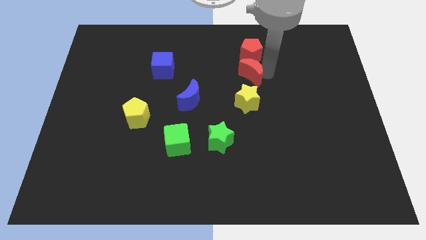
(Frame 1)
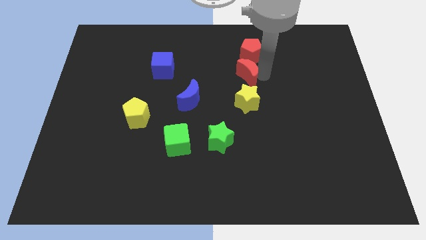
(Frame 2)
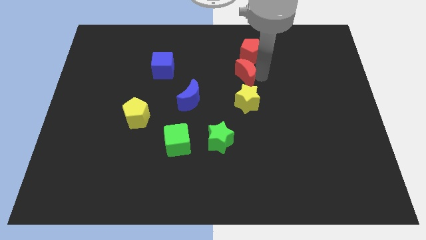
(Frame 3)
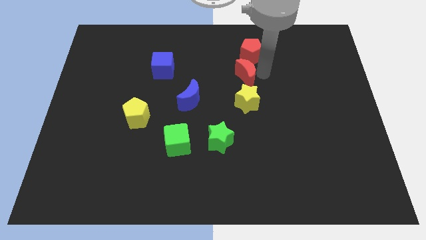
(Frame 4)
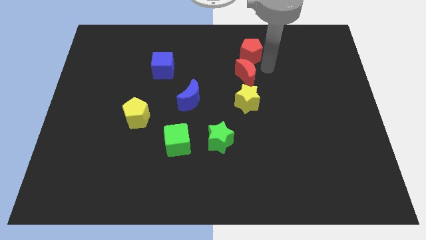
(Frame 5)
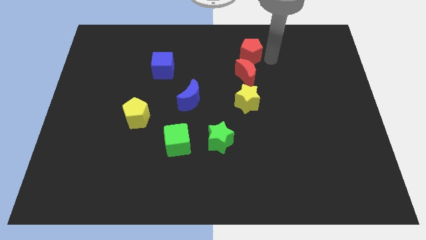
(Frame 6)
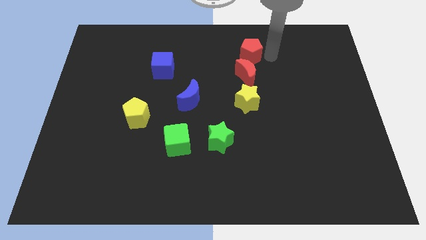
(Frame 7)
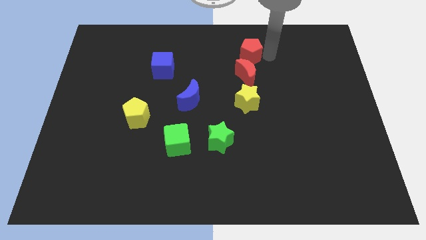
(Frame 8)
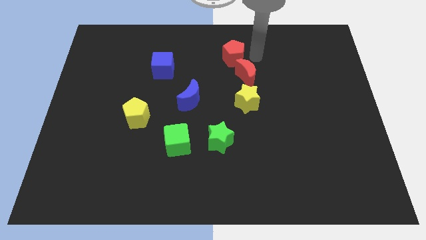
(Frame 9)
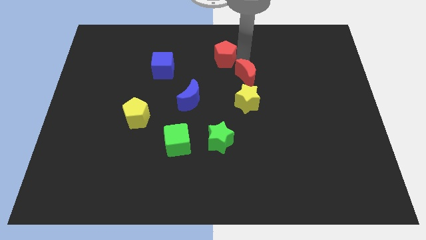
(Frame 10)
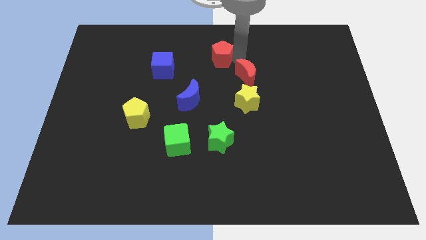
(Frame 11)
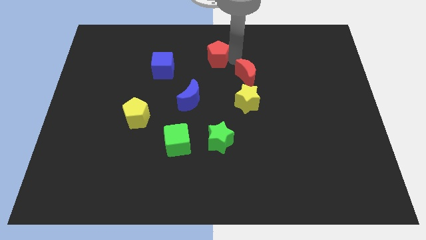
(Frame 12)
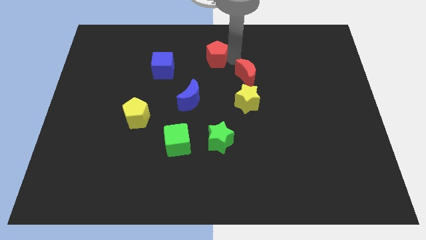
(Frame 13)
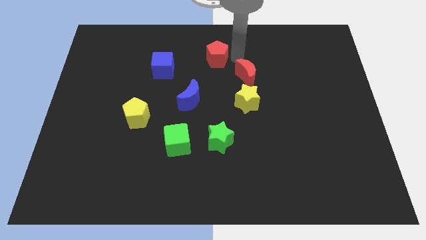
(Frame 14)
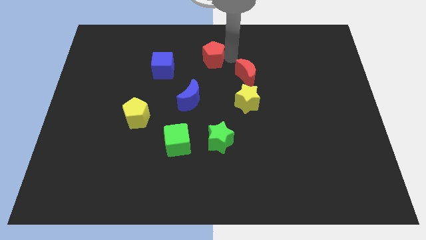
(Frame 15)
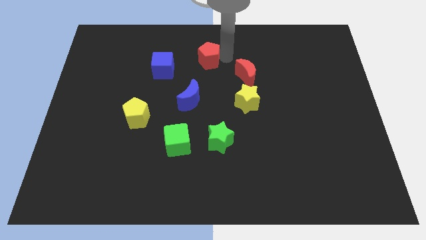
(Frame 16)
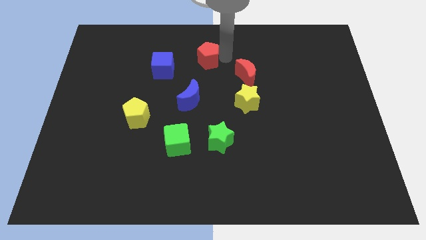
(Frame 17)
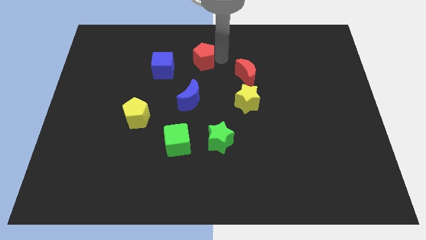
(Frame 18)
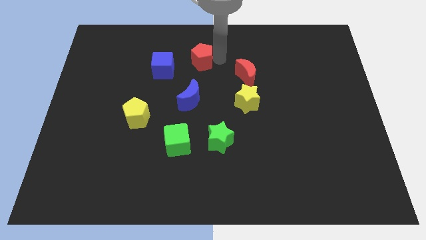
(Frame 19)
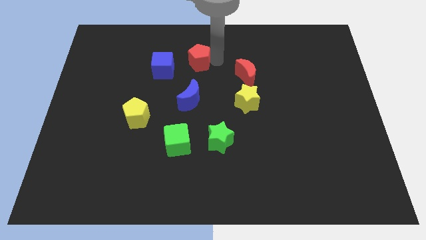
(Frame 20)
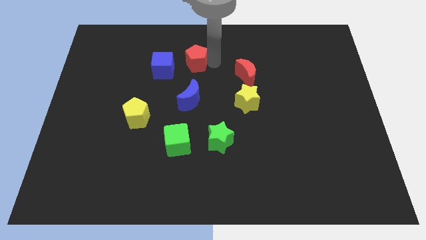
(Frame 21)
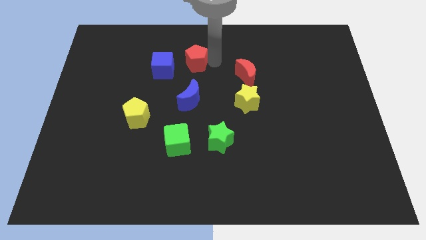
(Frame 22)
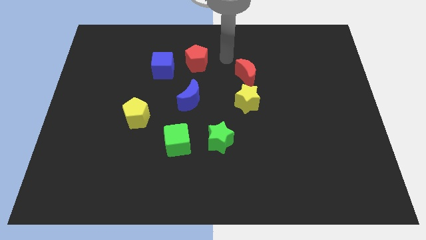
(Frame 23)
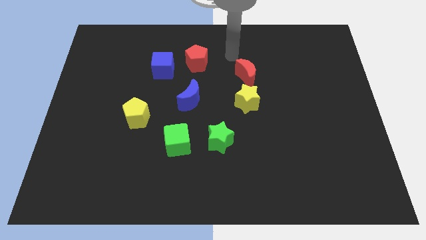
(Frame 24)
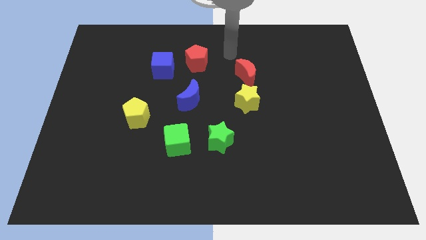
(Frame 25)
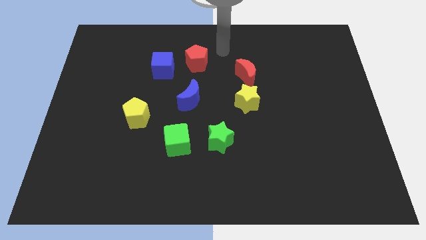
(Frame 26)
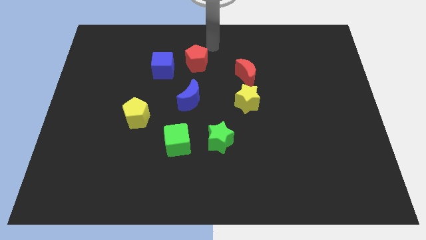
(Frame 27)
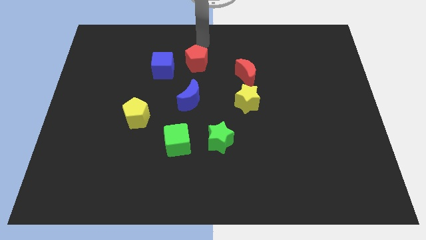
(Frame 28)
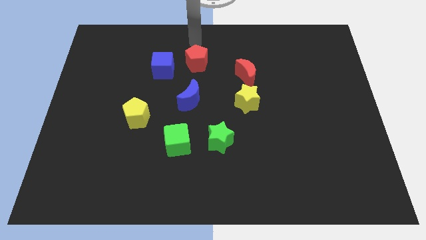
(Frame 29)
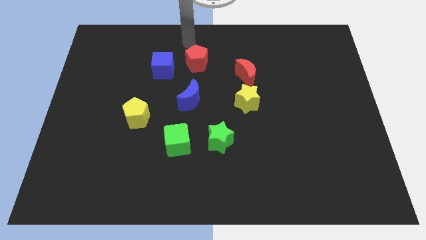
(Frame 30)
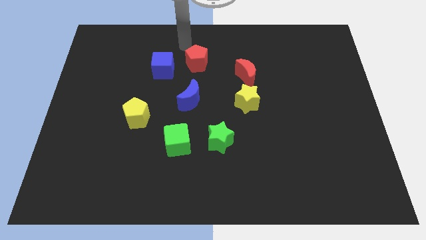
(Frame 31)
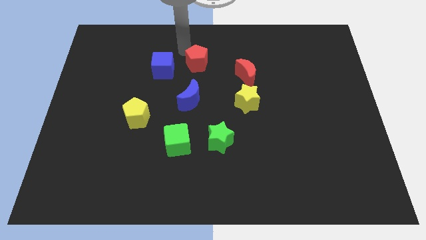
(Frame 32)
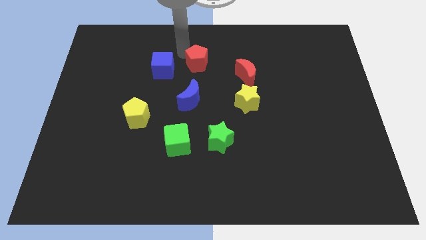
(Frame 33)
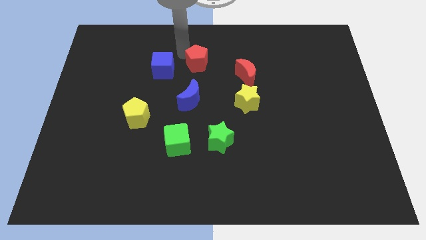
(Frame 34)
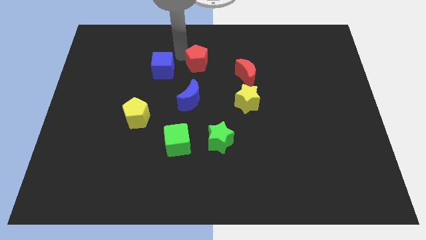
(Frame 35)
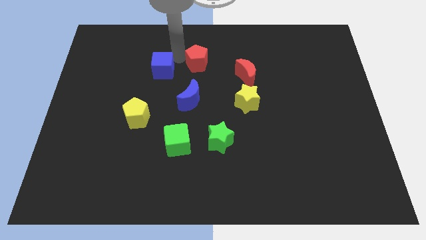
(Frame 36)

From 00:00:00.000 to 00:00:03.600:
push the red pentagon to the top right of the blue cube

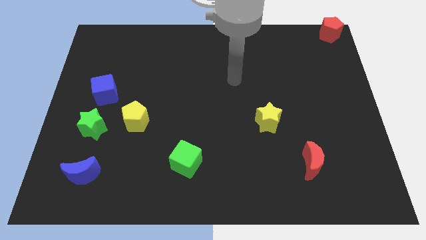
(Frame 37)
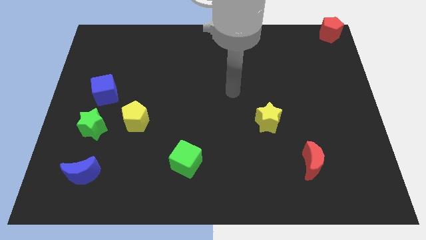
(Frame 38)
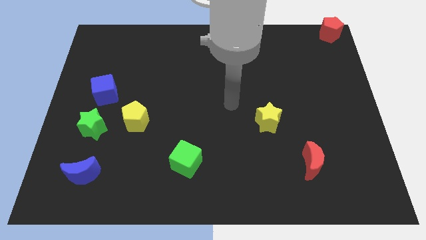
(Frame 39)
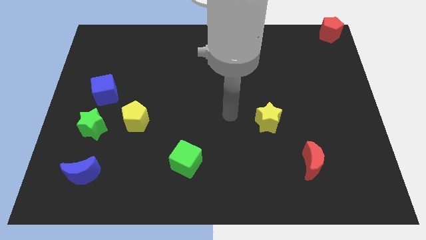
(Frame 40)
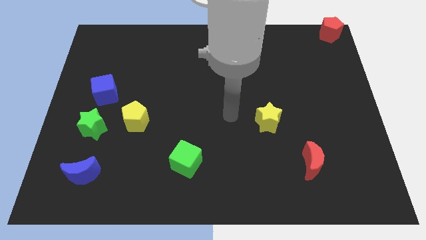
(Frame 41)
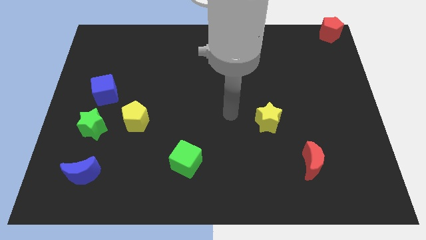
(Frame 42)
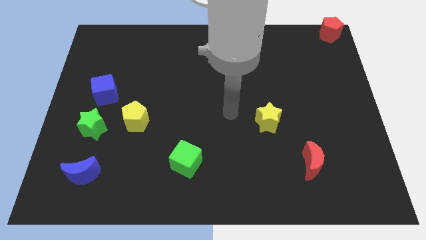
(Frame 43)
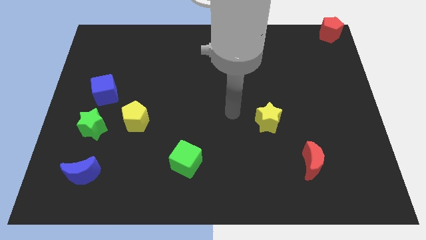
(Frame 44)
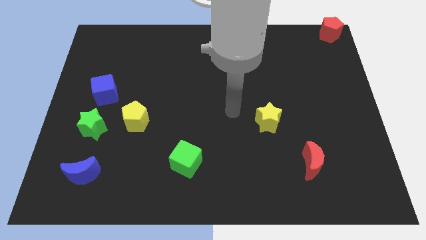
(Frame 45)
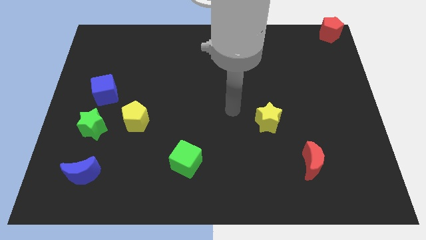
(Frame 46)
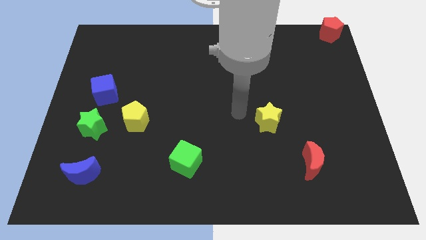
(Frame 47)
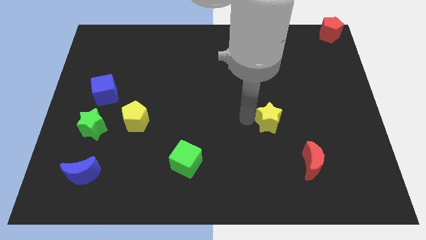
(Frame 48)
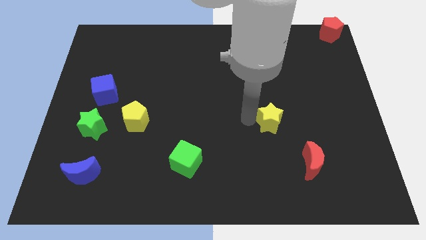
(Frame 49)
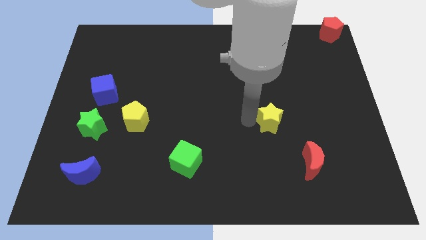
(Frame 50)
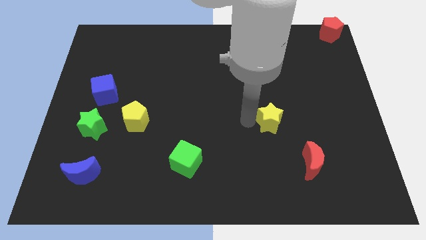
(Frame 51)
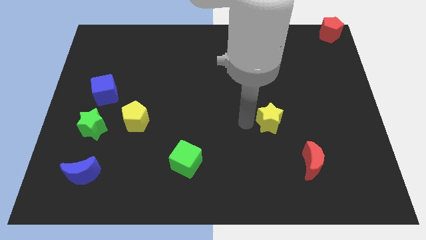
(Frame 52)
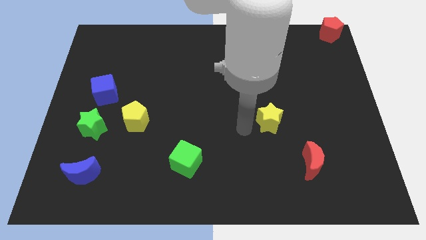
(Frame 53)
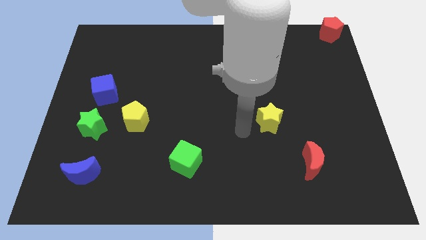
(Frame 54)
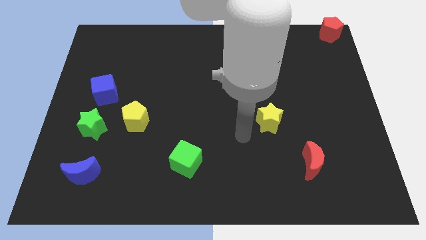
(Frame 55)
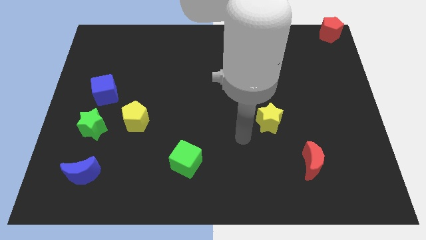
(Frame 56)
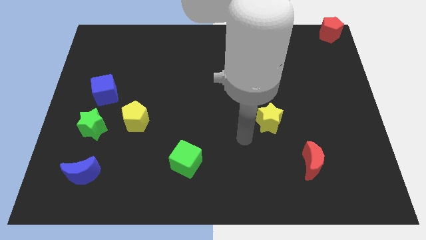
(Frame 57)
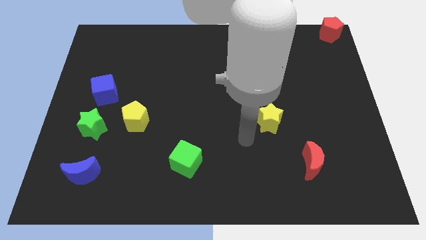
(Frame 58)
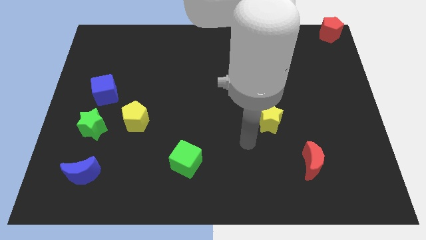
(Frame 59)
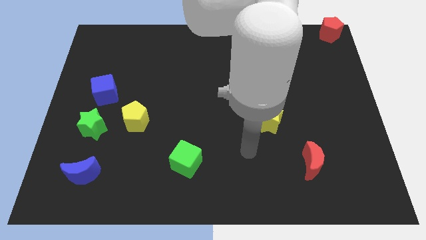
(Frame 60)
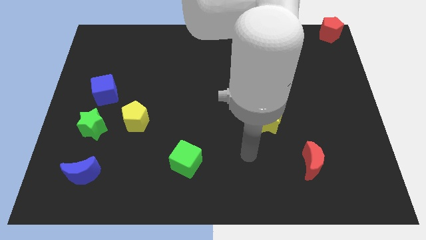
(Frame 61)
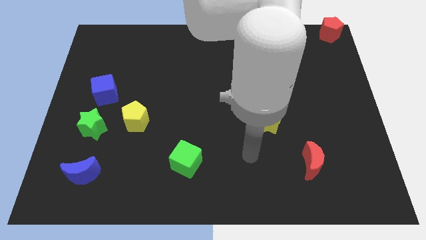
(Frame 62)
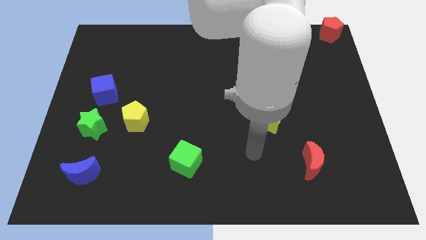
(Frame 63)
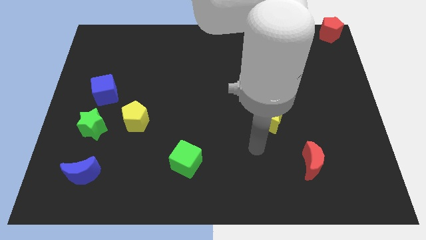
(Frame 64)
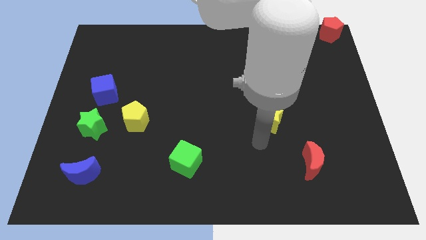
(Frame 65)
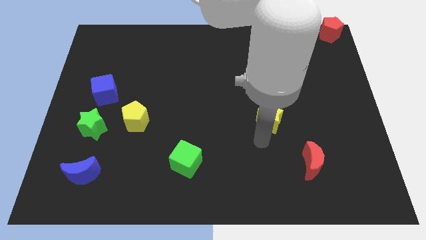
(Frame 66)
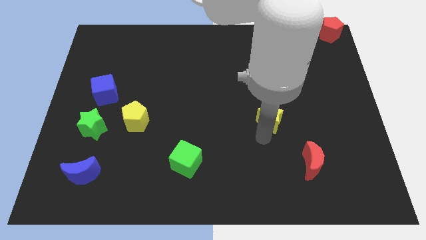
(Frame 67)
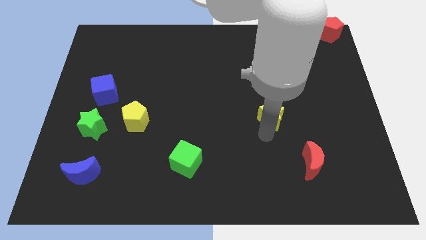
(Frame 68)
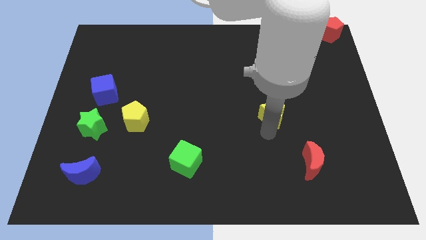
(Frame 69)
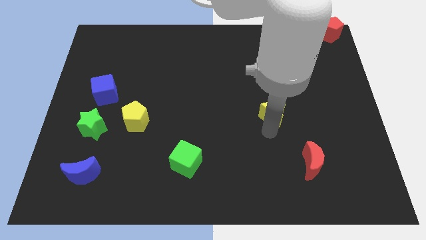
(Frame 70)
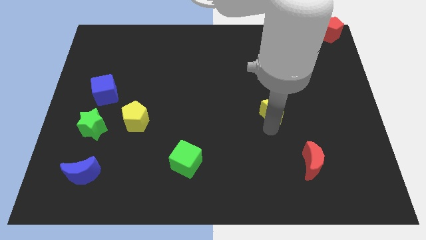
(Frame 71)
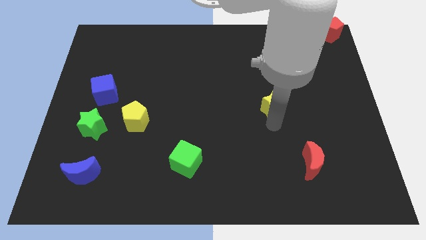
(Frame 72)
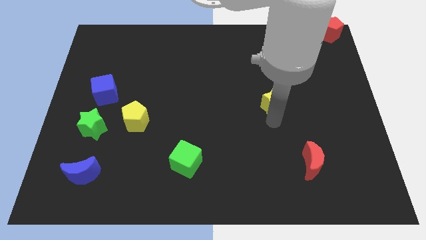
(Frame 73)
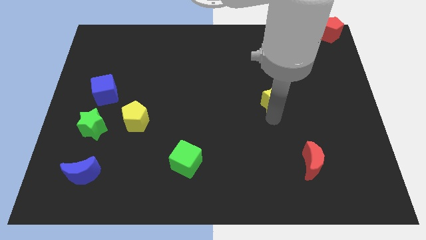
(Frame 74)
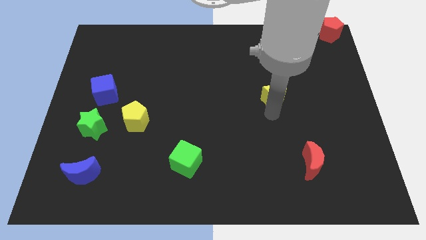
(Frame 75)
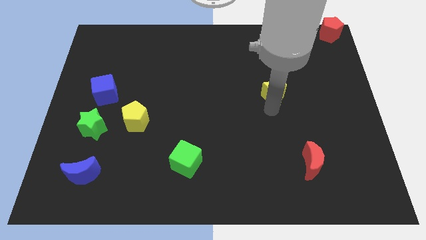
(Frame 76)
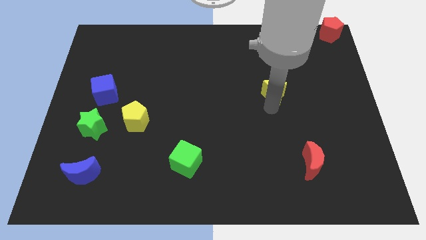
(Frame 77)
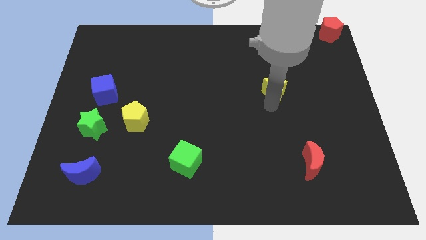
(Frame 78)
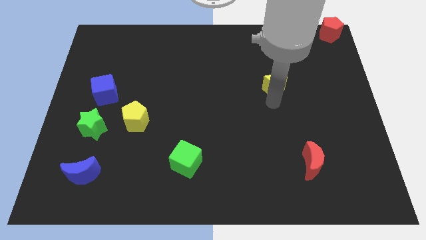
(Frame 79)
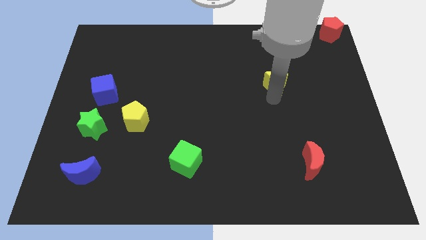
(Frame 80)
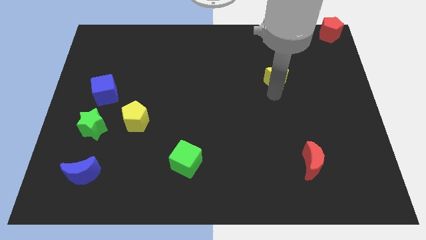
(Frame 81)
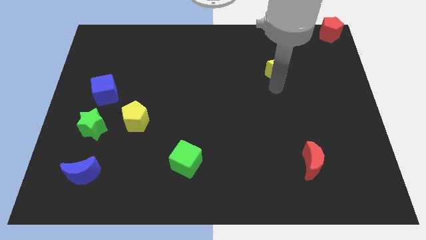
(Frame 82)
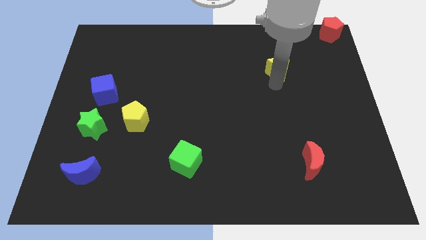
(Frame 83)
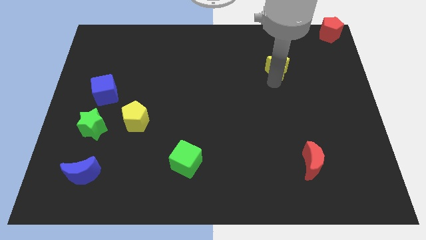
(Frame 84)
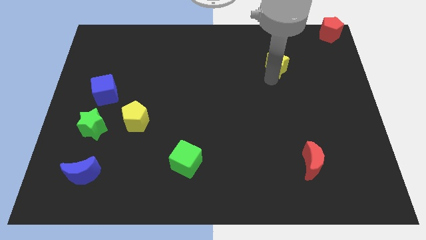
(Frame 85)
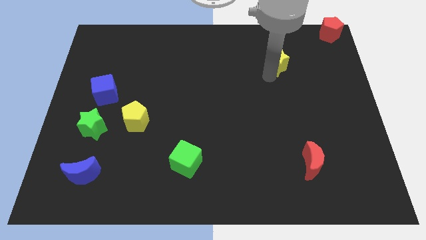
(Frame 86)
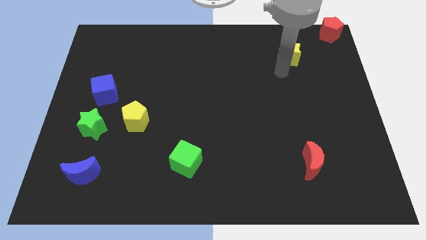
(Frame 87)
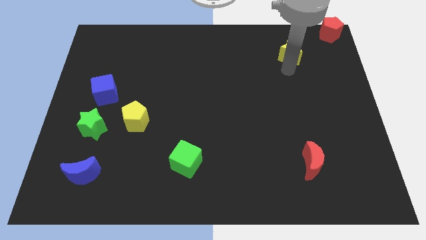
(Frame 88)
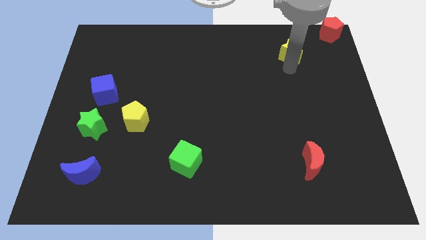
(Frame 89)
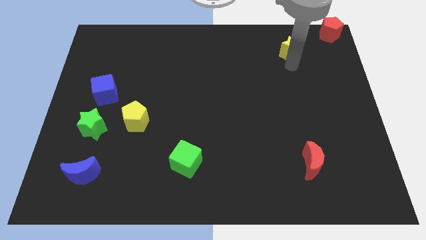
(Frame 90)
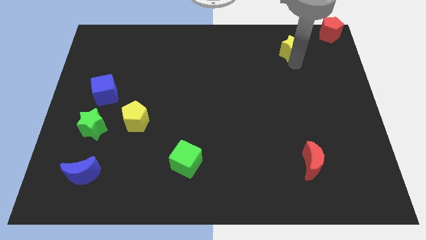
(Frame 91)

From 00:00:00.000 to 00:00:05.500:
place the yellow star diagonal to the red pentagon
